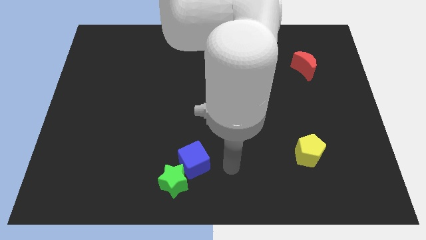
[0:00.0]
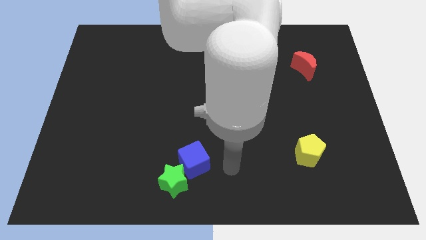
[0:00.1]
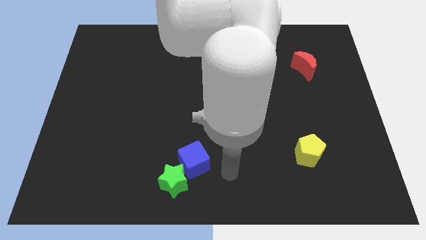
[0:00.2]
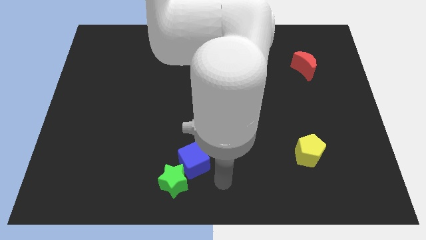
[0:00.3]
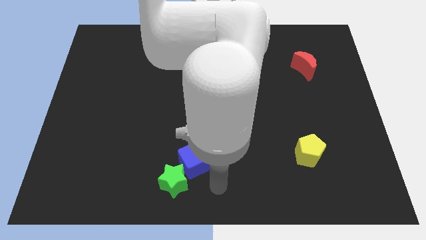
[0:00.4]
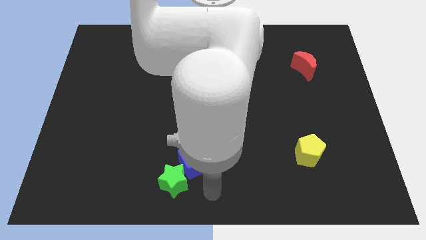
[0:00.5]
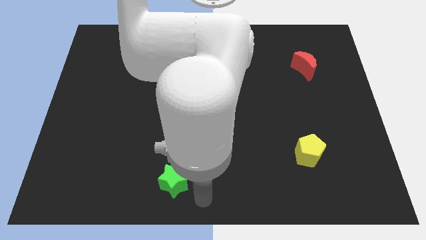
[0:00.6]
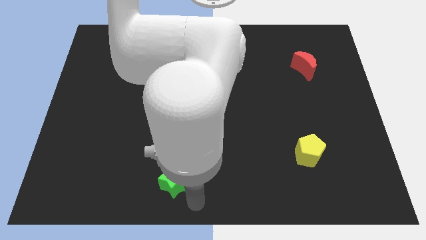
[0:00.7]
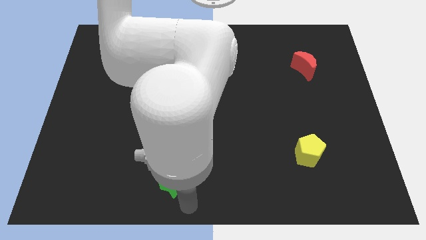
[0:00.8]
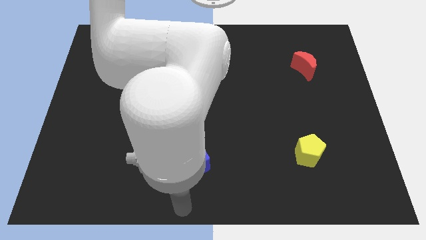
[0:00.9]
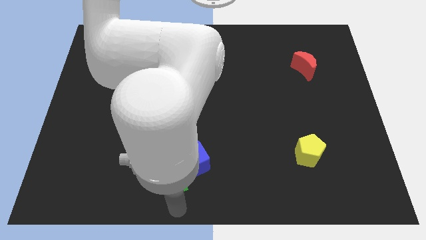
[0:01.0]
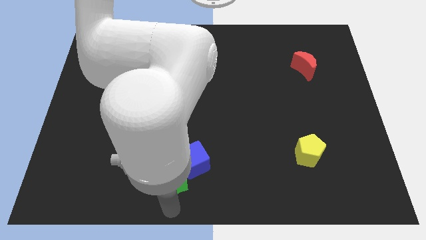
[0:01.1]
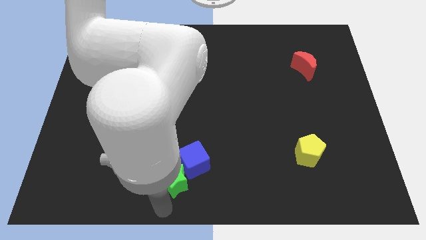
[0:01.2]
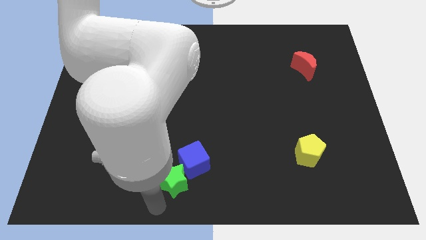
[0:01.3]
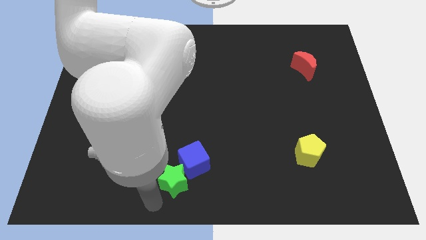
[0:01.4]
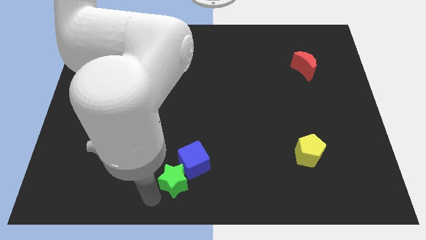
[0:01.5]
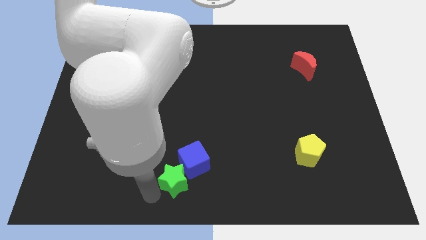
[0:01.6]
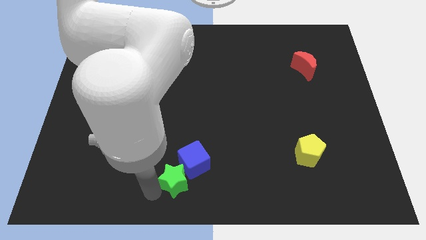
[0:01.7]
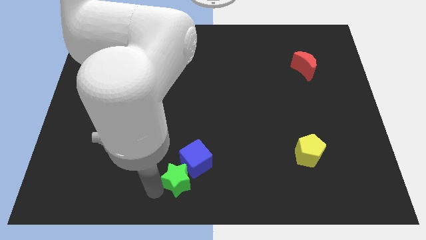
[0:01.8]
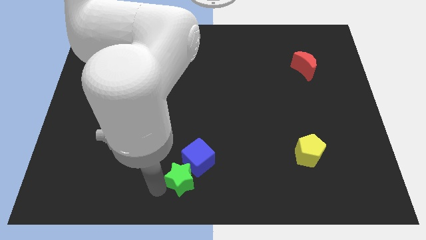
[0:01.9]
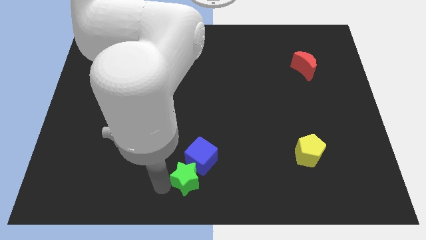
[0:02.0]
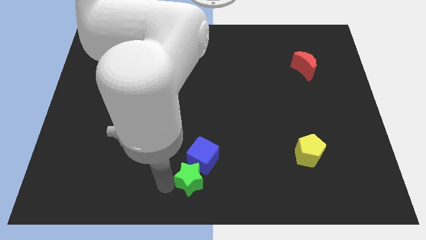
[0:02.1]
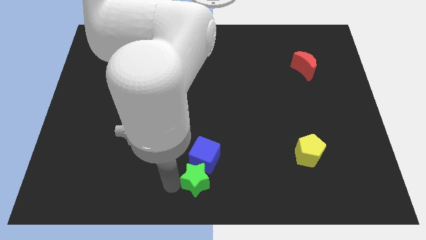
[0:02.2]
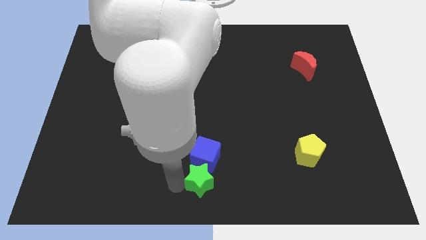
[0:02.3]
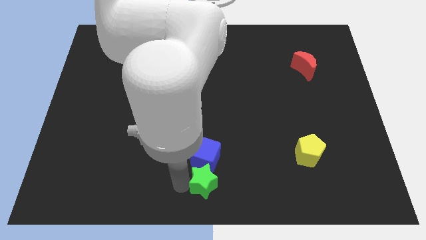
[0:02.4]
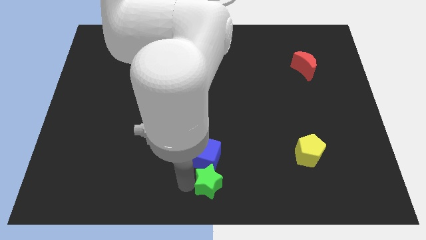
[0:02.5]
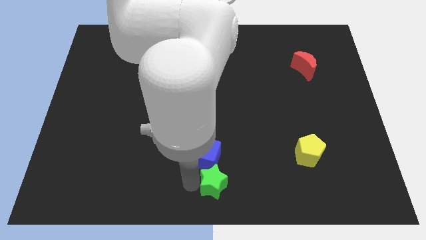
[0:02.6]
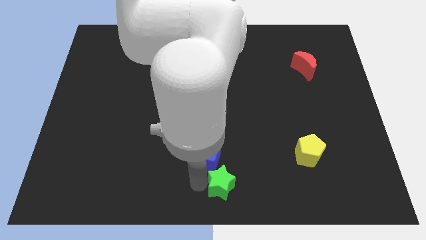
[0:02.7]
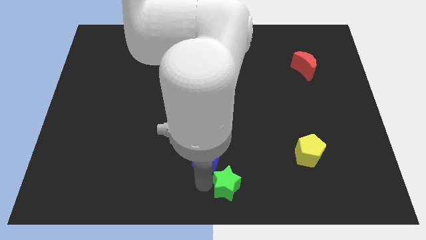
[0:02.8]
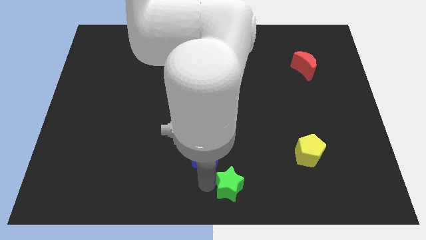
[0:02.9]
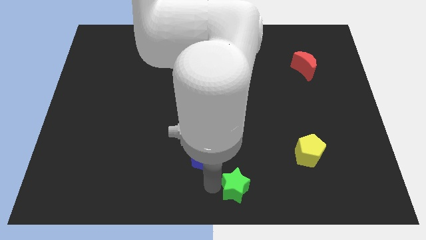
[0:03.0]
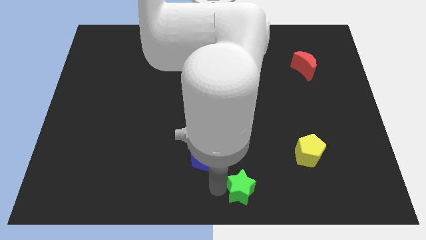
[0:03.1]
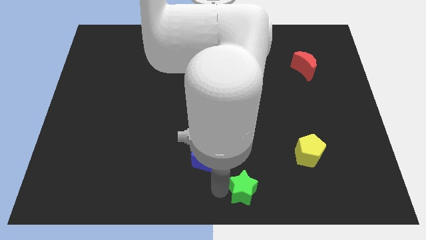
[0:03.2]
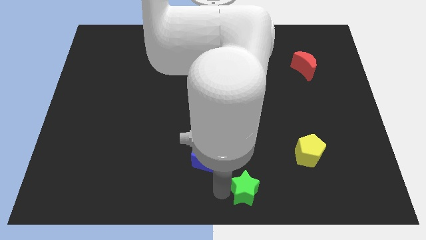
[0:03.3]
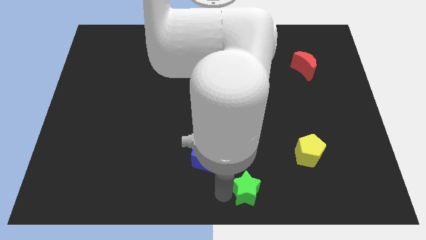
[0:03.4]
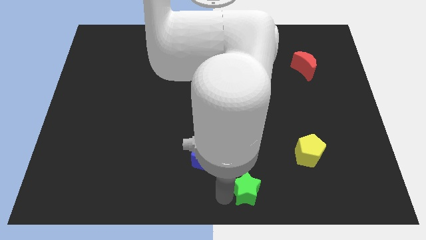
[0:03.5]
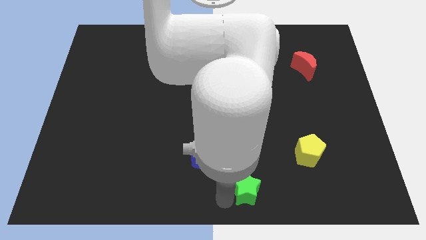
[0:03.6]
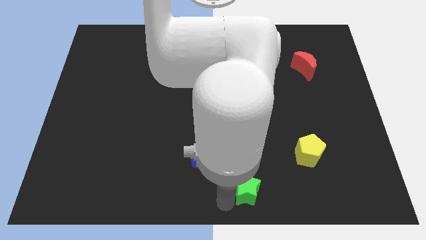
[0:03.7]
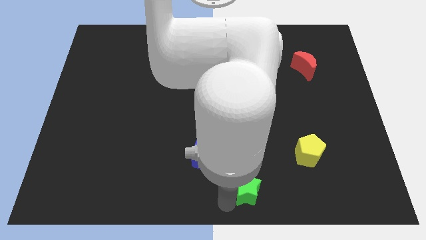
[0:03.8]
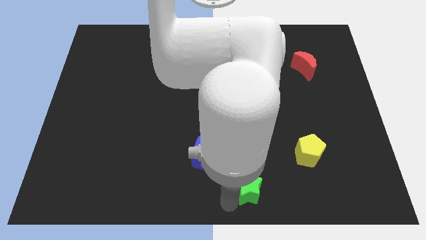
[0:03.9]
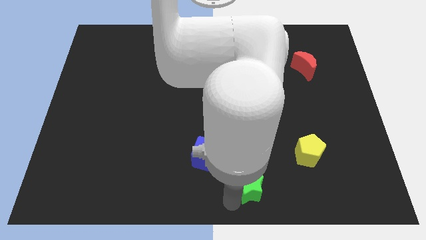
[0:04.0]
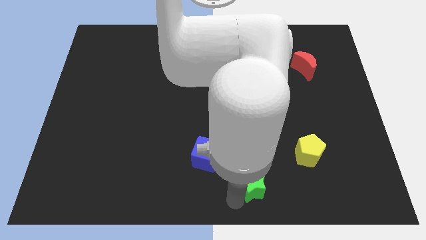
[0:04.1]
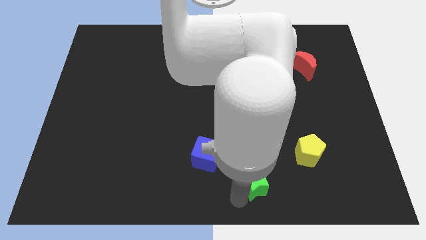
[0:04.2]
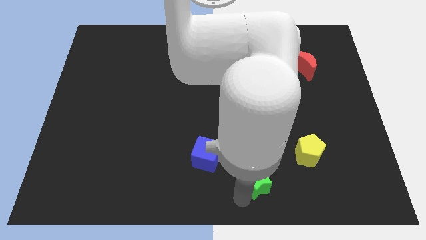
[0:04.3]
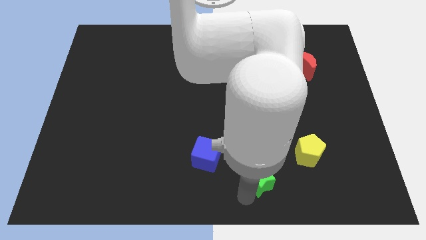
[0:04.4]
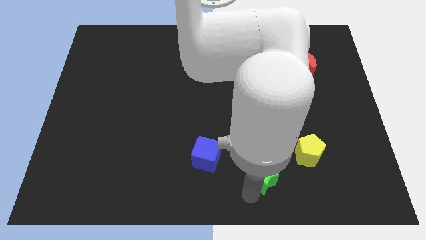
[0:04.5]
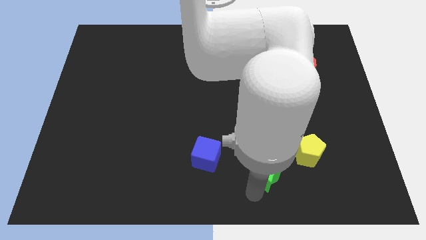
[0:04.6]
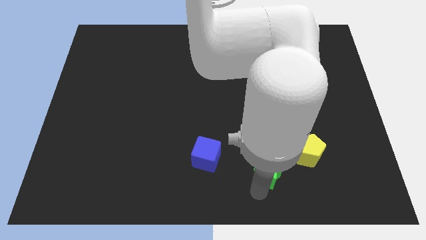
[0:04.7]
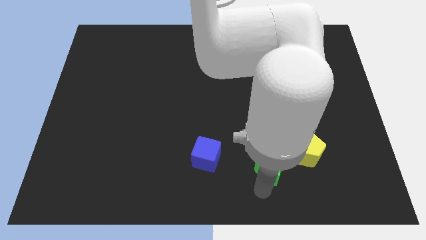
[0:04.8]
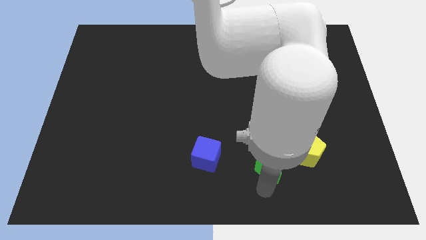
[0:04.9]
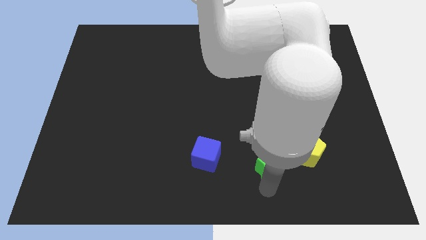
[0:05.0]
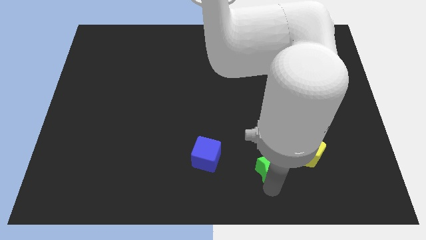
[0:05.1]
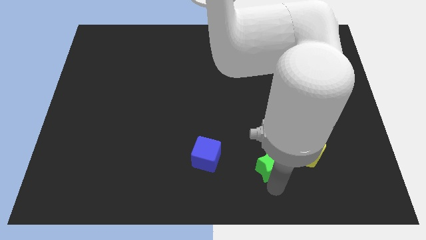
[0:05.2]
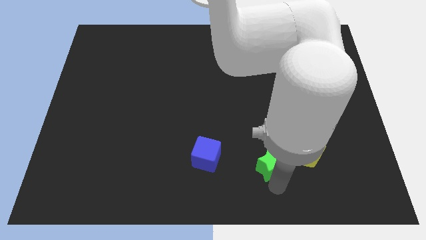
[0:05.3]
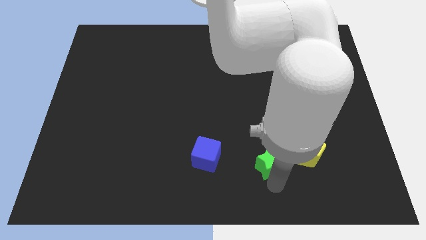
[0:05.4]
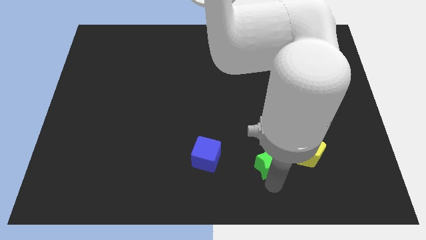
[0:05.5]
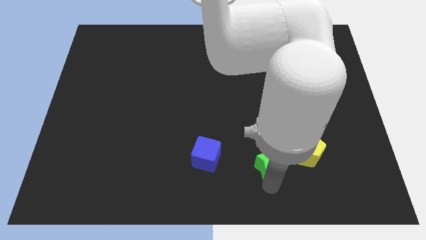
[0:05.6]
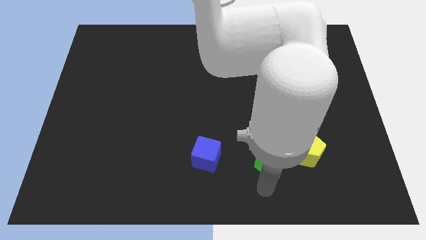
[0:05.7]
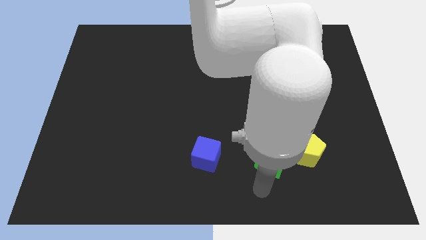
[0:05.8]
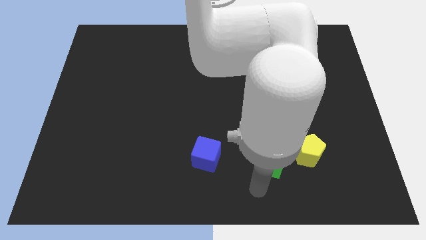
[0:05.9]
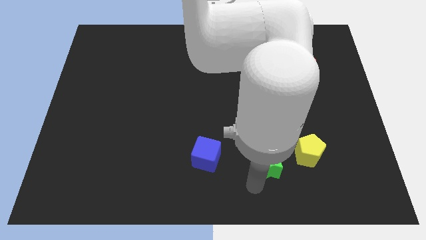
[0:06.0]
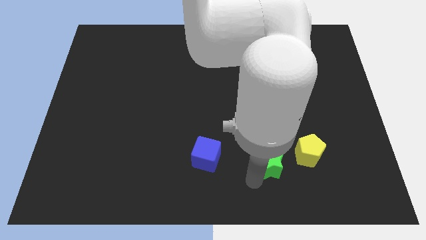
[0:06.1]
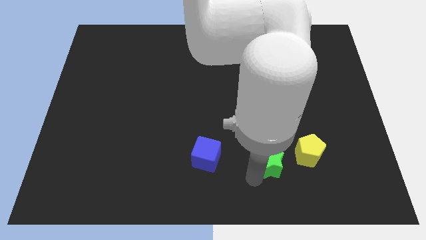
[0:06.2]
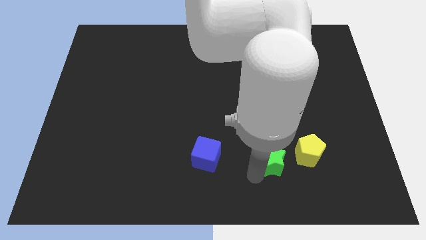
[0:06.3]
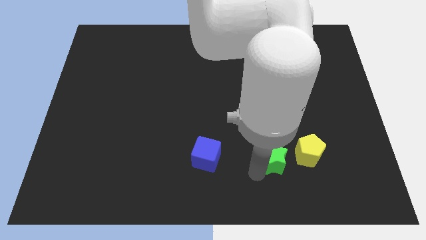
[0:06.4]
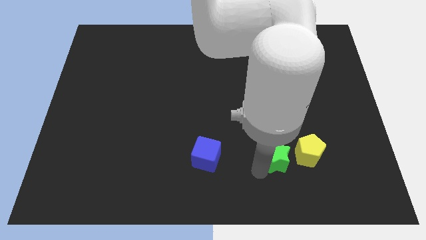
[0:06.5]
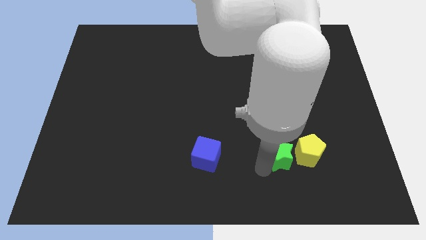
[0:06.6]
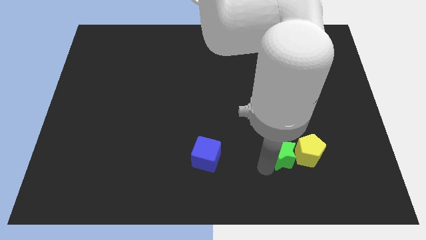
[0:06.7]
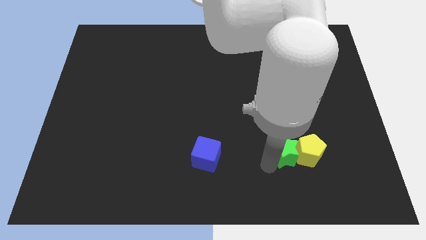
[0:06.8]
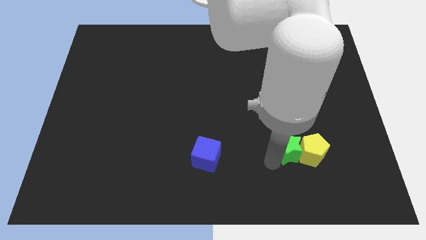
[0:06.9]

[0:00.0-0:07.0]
slide the star close to the yellow block

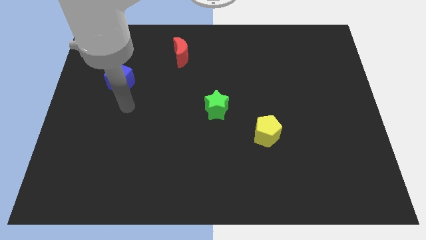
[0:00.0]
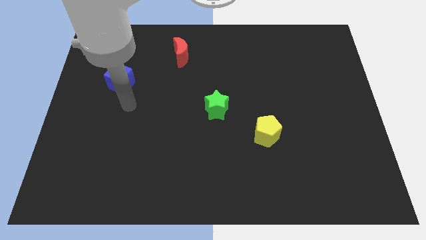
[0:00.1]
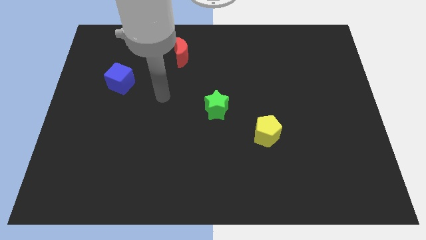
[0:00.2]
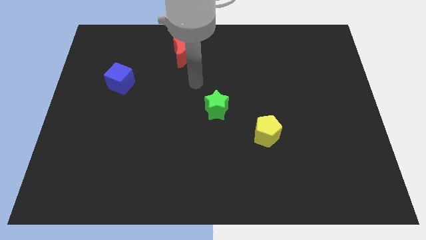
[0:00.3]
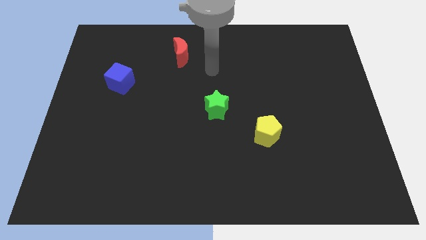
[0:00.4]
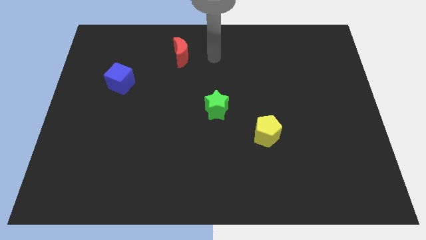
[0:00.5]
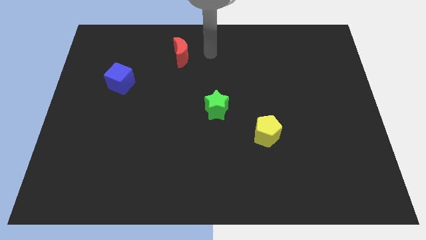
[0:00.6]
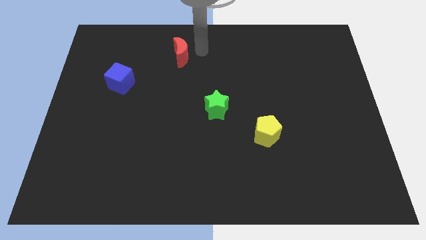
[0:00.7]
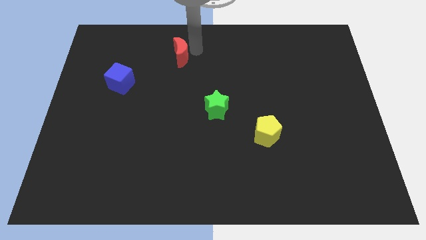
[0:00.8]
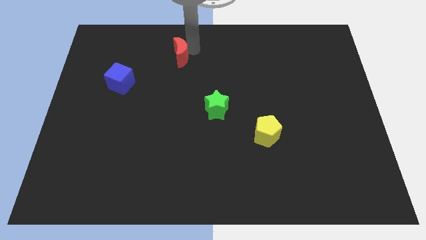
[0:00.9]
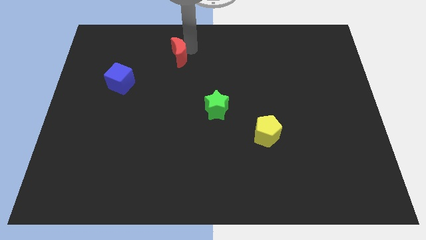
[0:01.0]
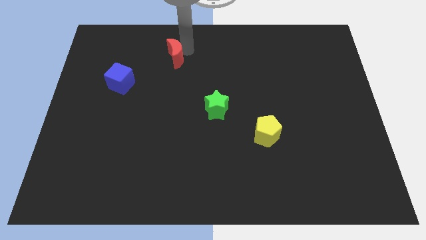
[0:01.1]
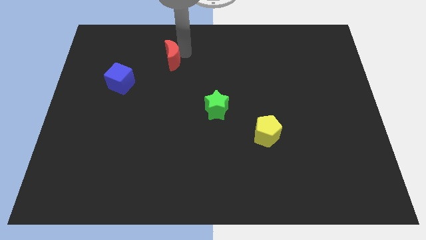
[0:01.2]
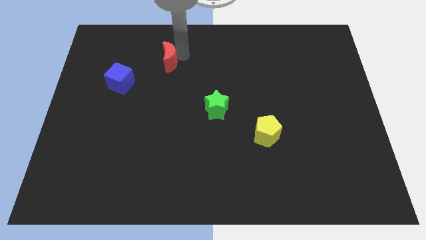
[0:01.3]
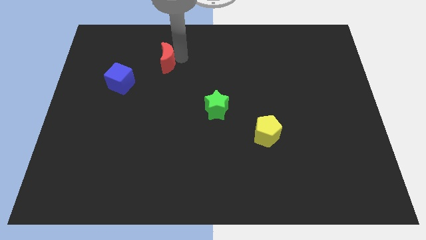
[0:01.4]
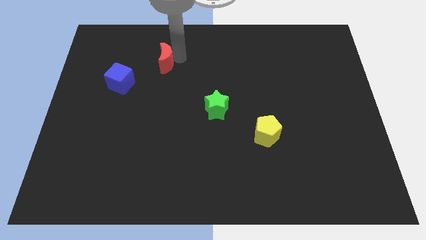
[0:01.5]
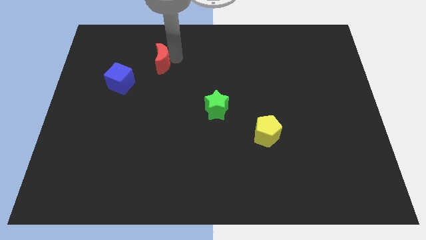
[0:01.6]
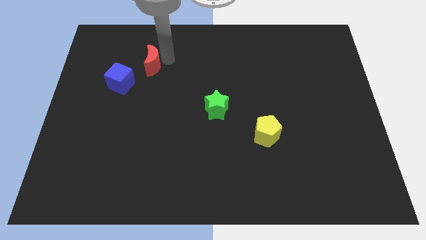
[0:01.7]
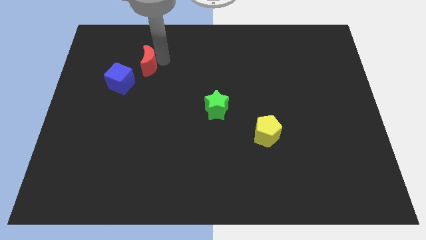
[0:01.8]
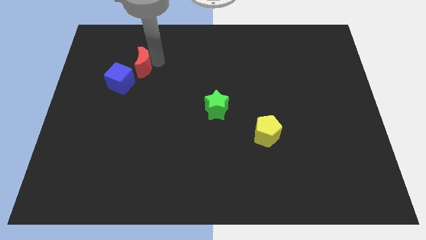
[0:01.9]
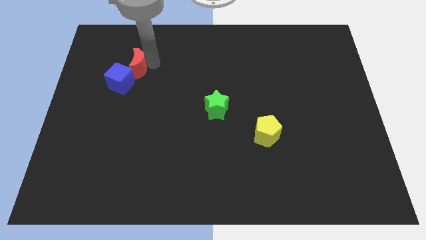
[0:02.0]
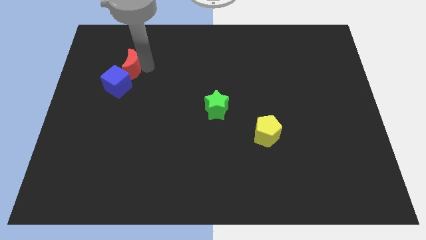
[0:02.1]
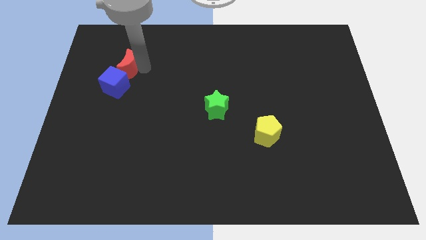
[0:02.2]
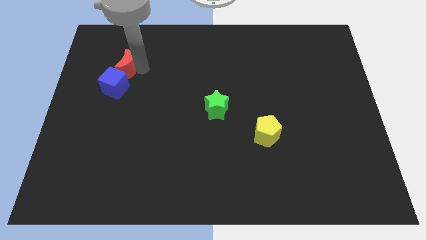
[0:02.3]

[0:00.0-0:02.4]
move the moon towards the cube
